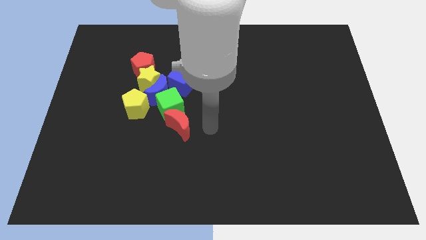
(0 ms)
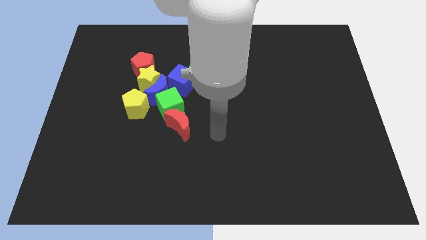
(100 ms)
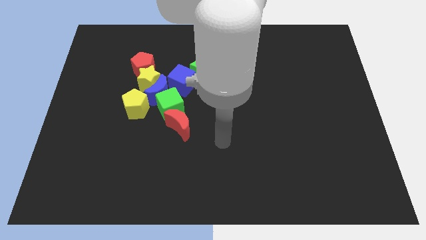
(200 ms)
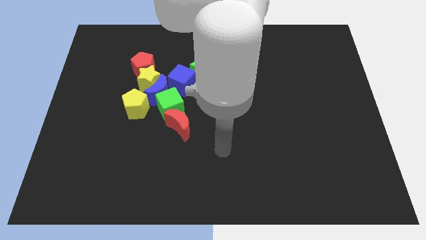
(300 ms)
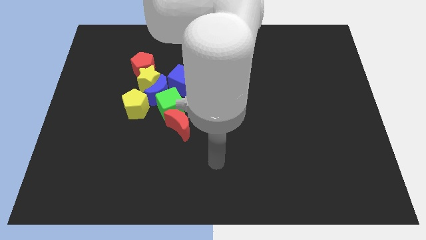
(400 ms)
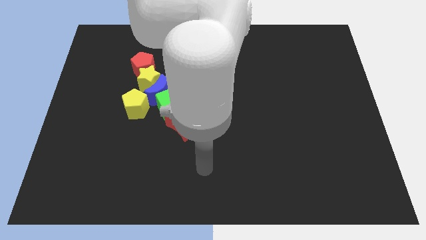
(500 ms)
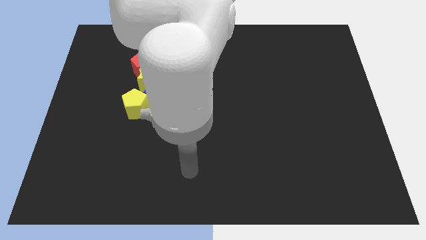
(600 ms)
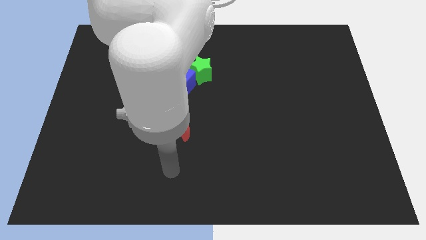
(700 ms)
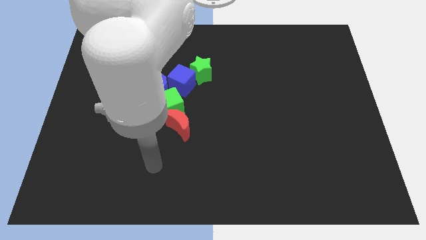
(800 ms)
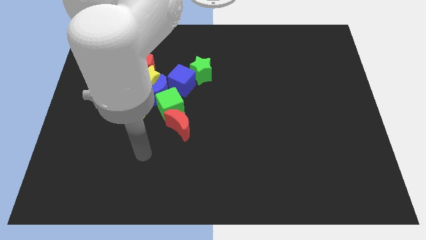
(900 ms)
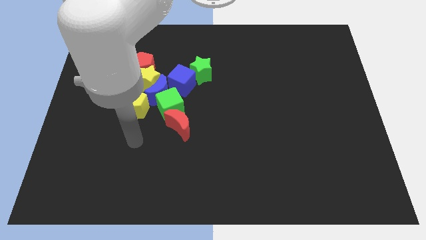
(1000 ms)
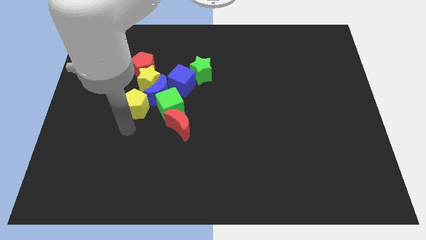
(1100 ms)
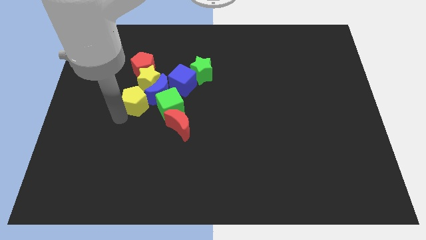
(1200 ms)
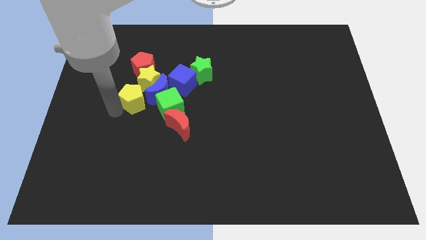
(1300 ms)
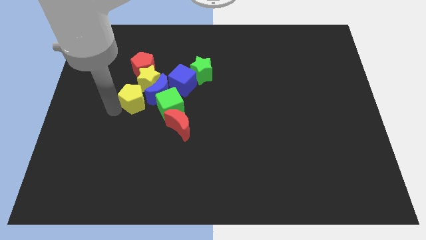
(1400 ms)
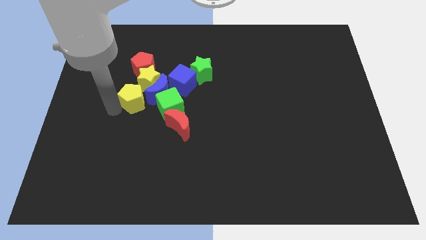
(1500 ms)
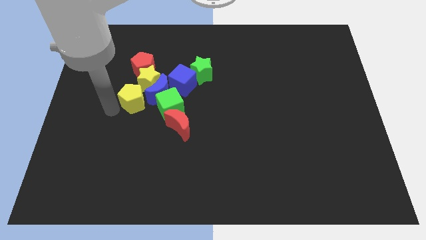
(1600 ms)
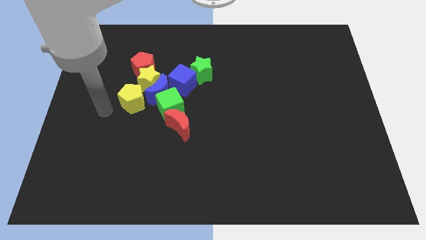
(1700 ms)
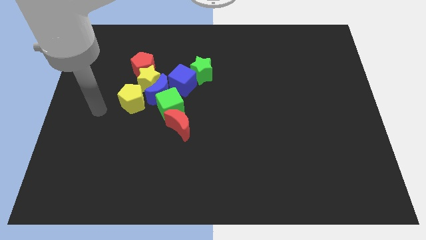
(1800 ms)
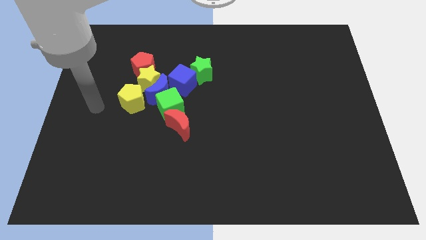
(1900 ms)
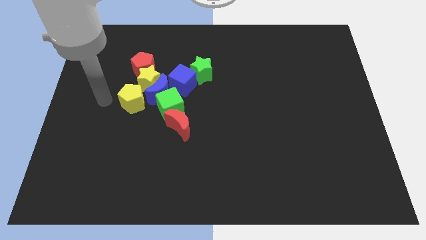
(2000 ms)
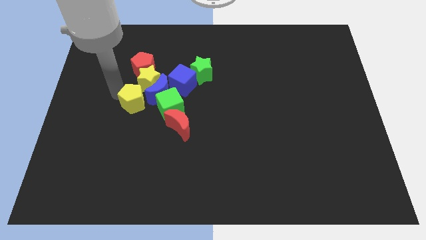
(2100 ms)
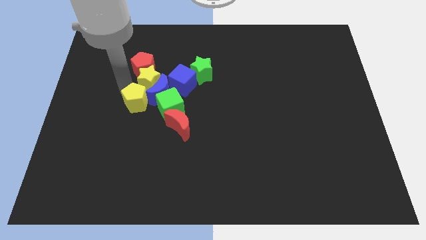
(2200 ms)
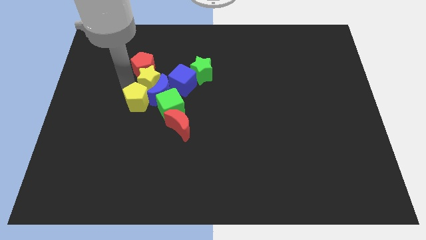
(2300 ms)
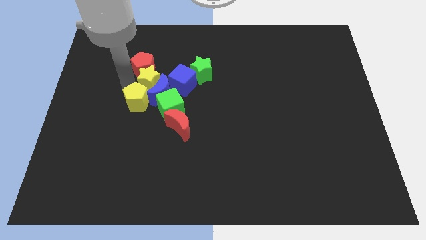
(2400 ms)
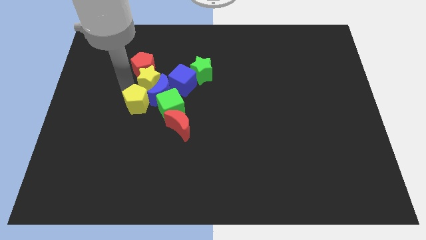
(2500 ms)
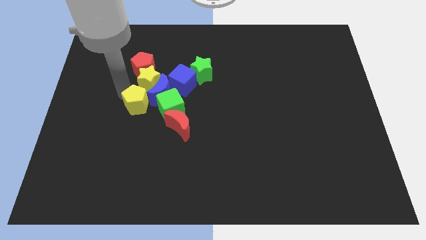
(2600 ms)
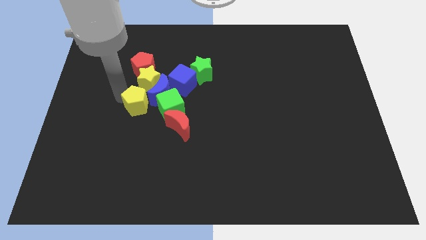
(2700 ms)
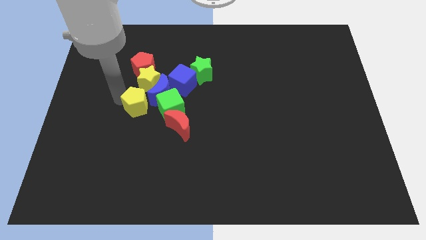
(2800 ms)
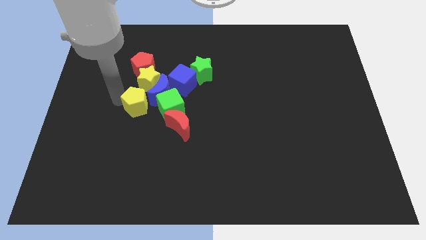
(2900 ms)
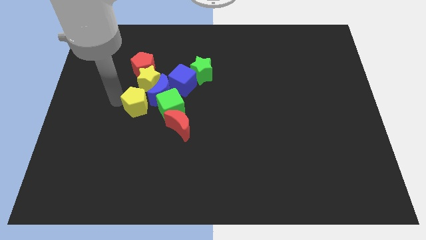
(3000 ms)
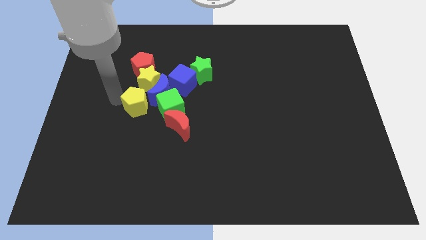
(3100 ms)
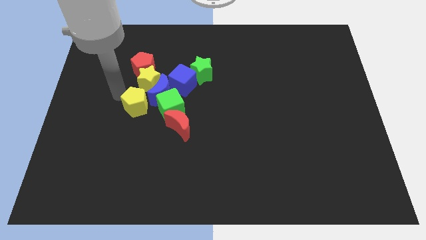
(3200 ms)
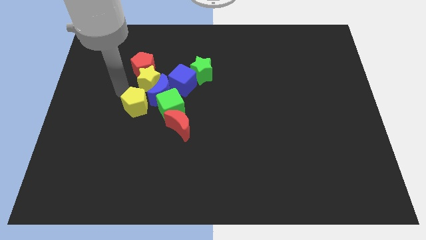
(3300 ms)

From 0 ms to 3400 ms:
push the yellow pentagon into blue moon

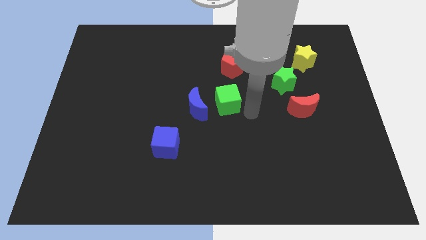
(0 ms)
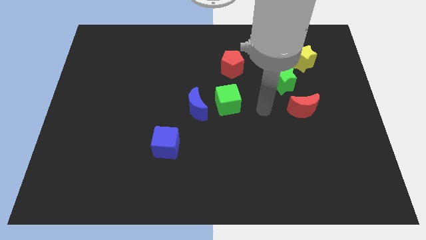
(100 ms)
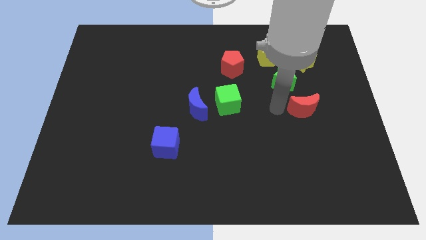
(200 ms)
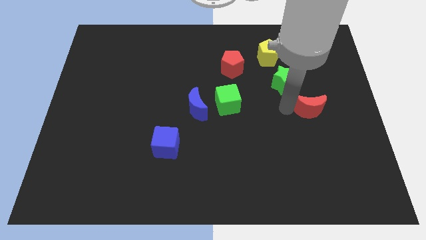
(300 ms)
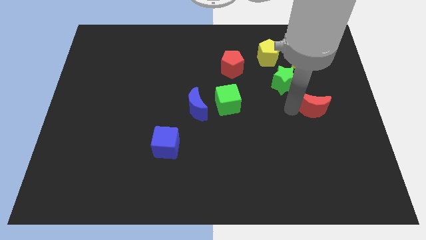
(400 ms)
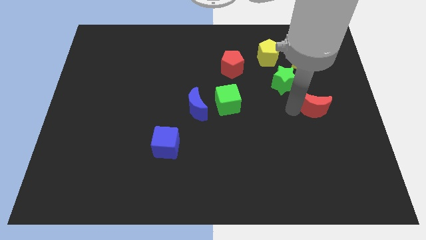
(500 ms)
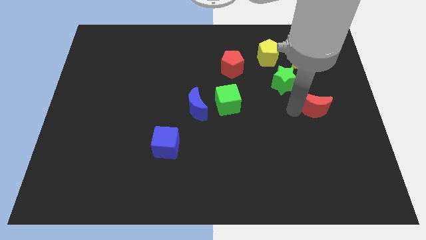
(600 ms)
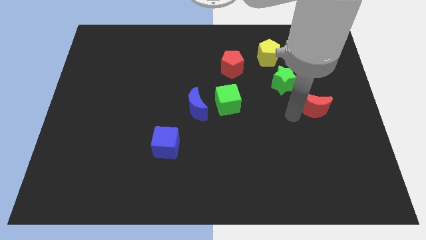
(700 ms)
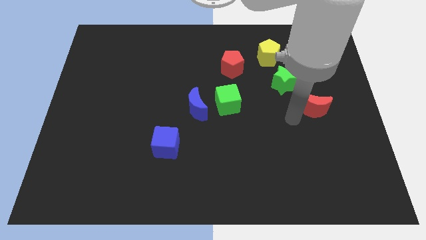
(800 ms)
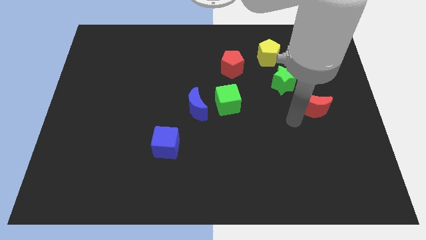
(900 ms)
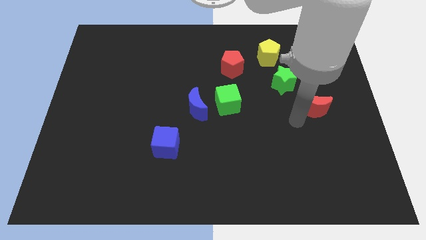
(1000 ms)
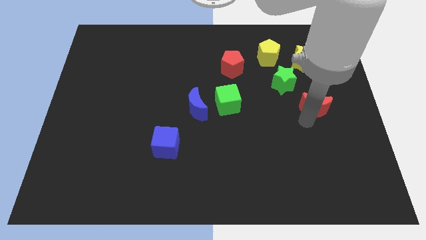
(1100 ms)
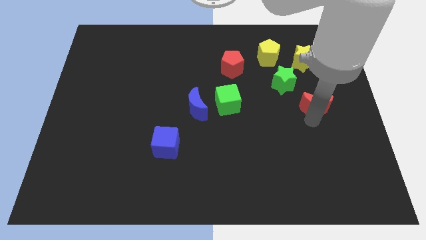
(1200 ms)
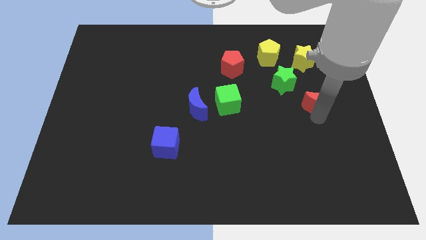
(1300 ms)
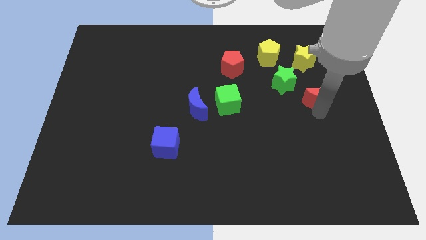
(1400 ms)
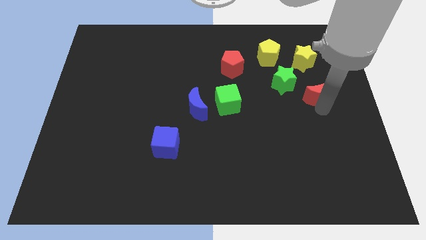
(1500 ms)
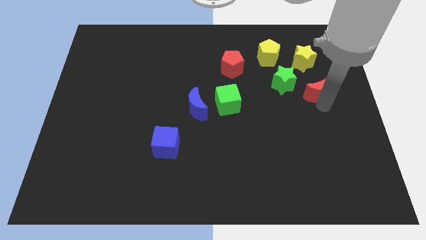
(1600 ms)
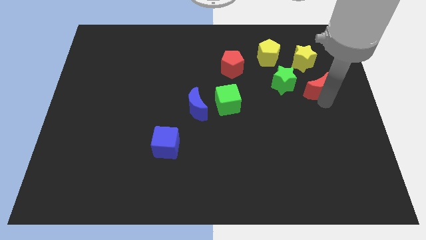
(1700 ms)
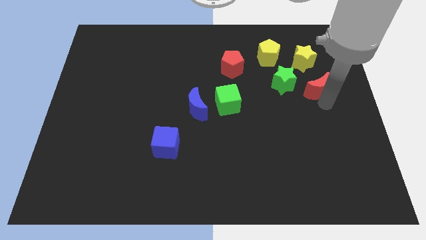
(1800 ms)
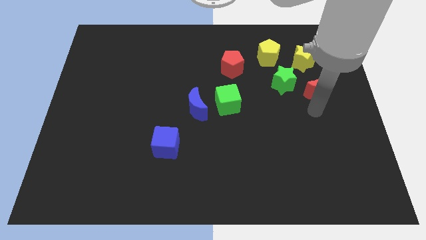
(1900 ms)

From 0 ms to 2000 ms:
take the red moon towards the yellow star

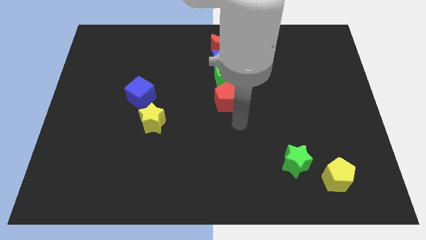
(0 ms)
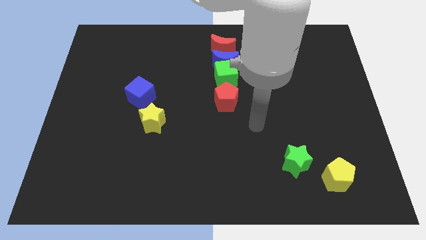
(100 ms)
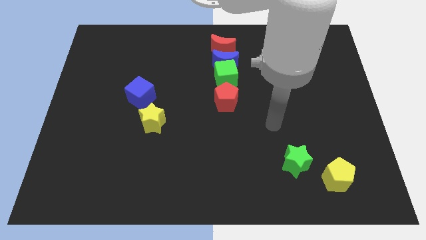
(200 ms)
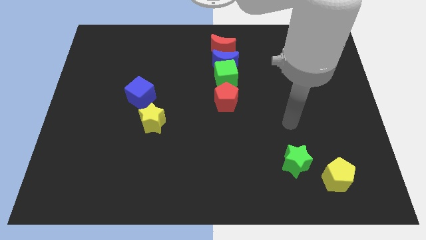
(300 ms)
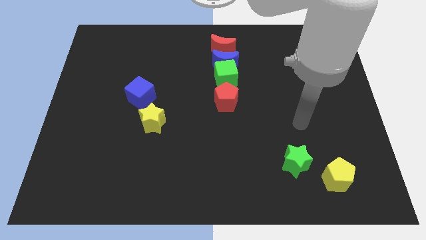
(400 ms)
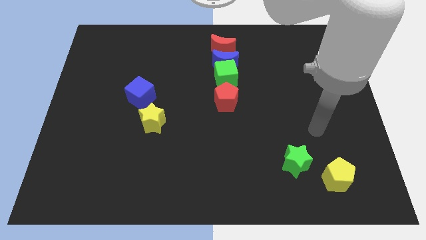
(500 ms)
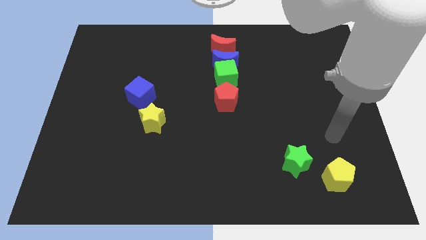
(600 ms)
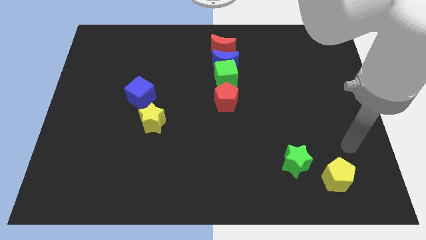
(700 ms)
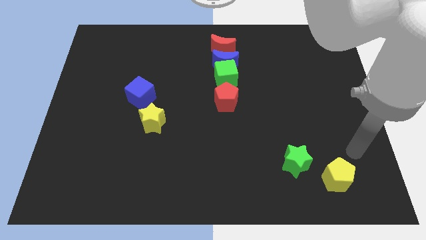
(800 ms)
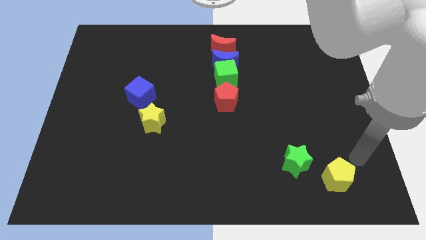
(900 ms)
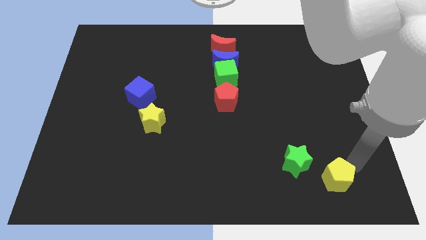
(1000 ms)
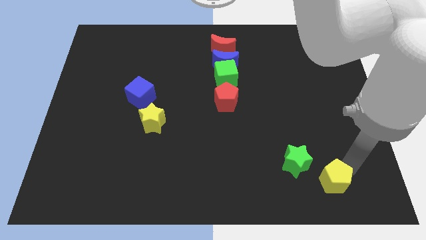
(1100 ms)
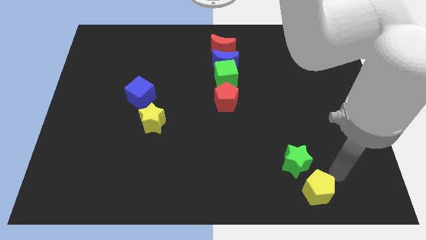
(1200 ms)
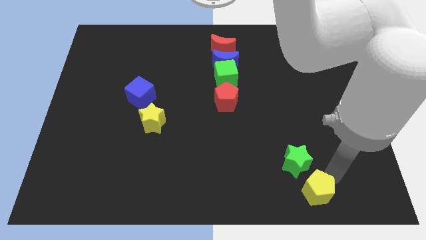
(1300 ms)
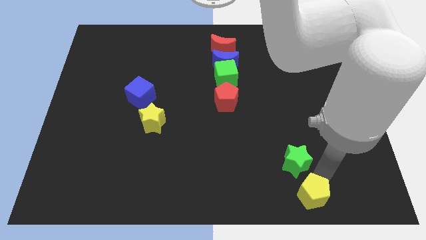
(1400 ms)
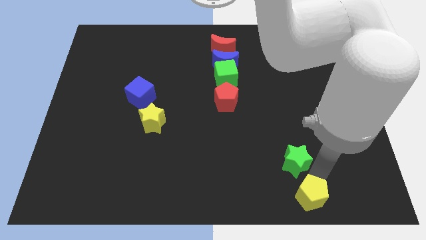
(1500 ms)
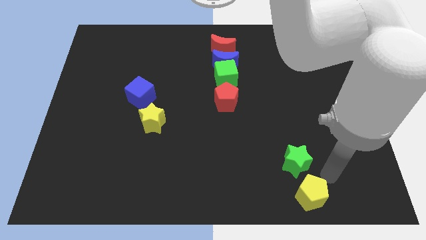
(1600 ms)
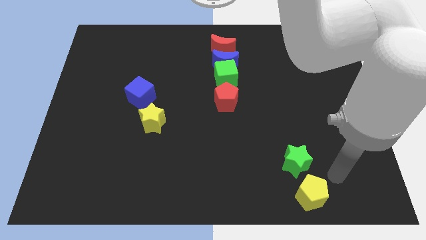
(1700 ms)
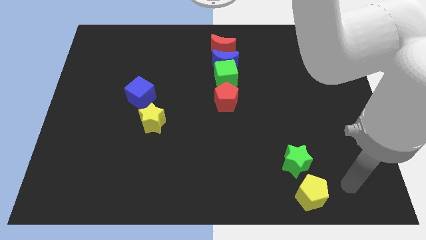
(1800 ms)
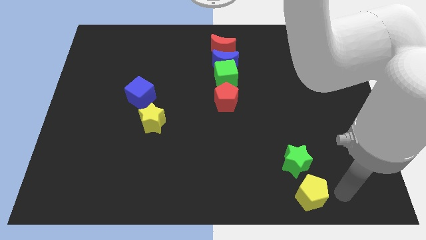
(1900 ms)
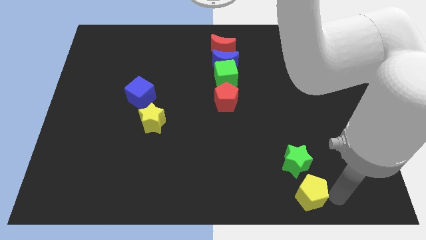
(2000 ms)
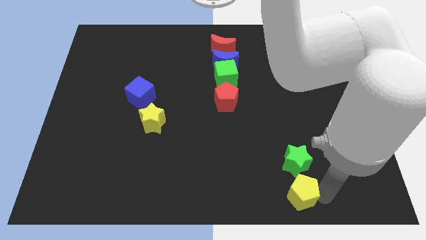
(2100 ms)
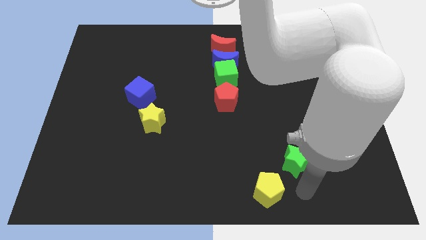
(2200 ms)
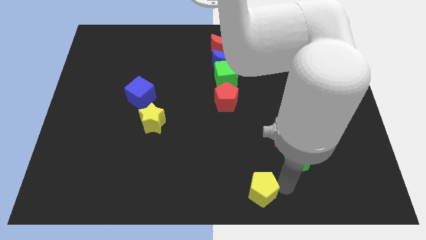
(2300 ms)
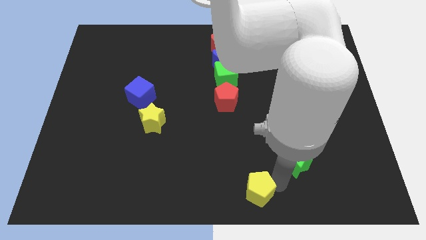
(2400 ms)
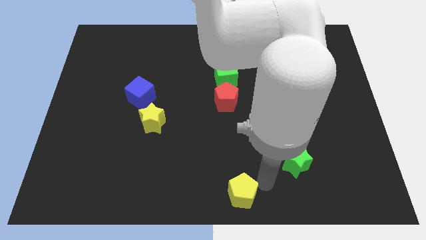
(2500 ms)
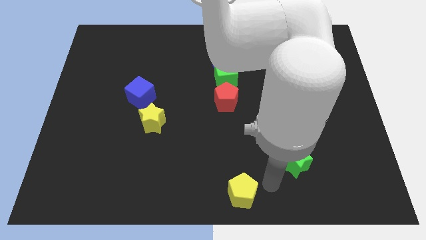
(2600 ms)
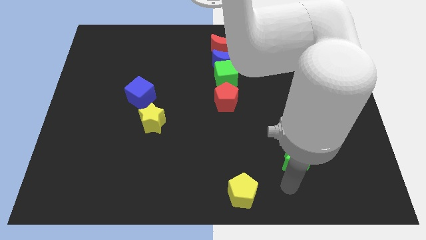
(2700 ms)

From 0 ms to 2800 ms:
push the yellow pentagon downward

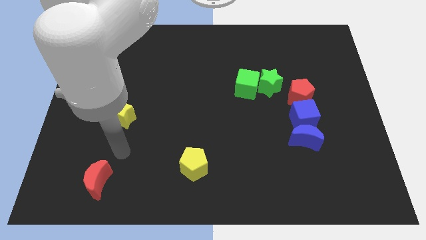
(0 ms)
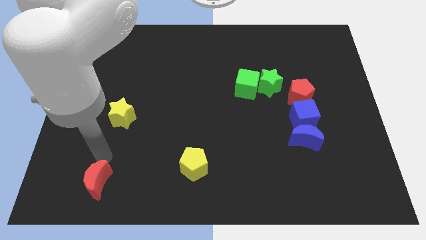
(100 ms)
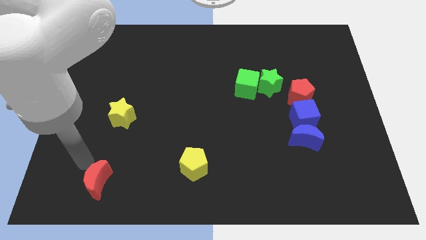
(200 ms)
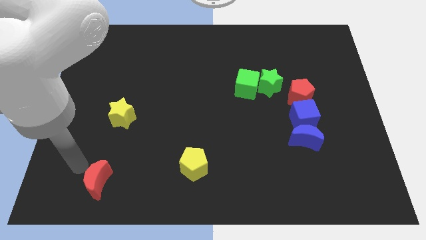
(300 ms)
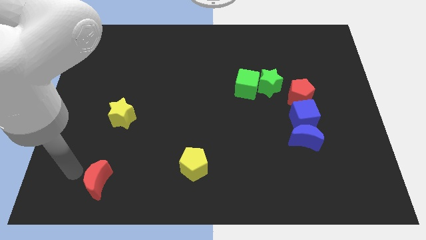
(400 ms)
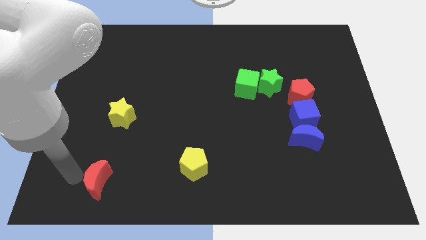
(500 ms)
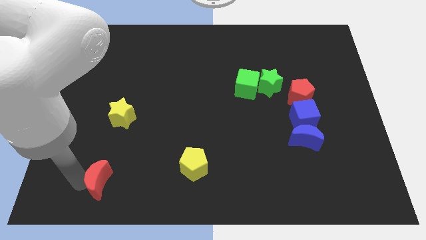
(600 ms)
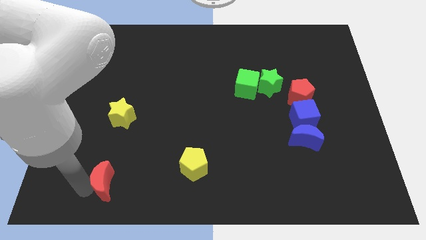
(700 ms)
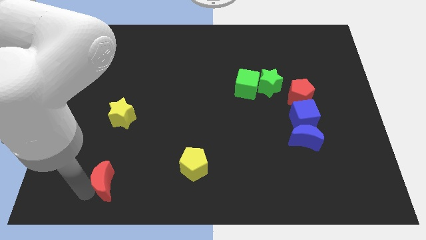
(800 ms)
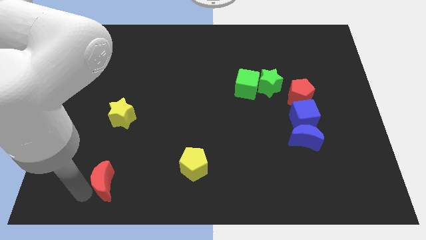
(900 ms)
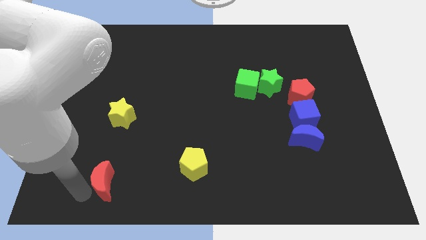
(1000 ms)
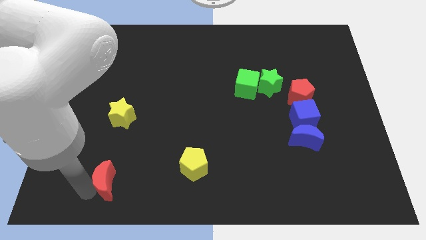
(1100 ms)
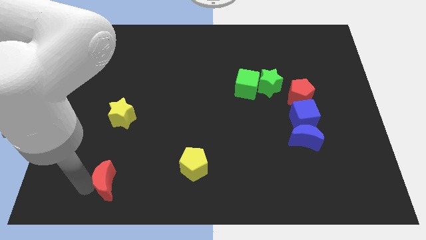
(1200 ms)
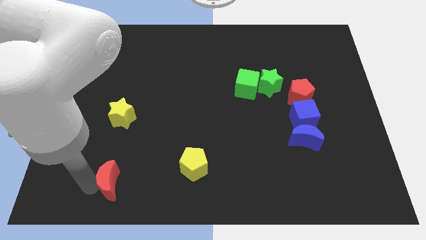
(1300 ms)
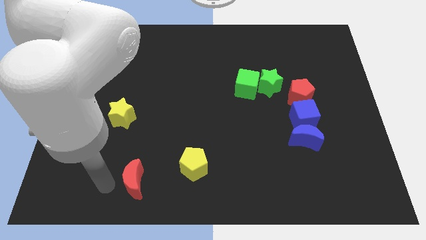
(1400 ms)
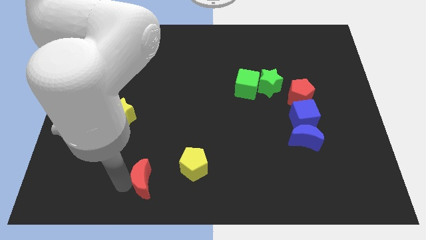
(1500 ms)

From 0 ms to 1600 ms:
move the red crescent slightly to the right
